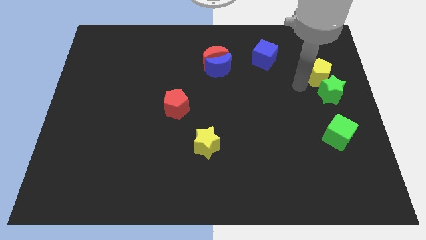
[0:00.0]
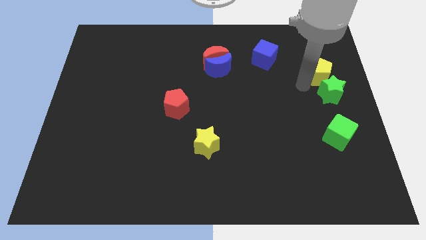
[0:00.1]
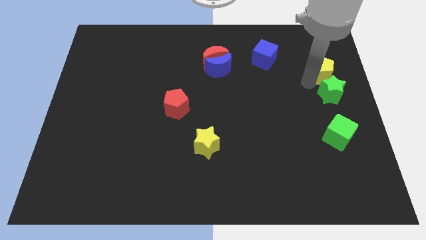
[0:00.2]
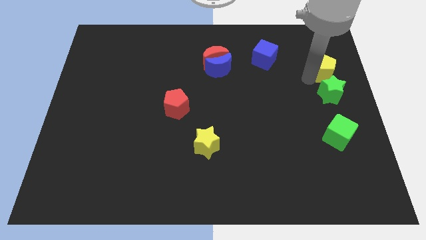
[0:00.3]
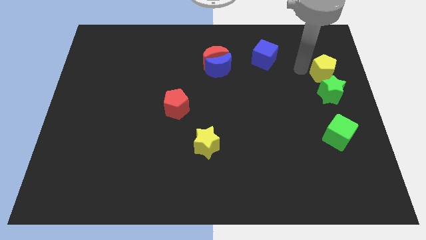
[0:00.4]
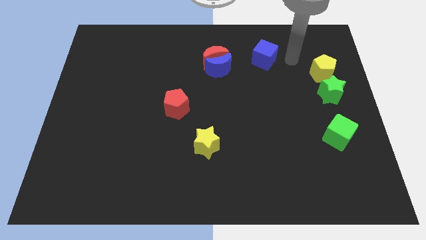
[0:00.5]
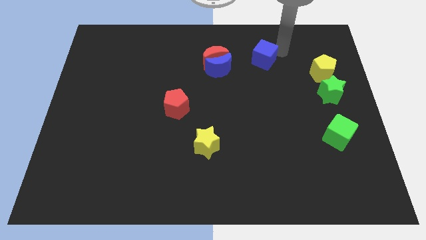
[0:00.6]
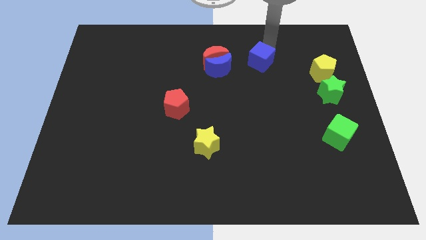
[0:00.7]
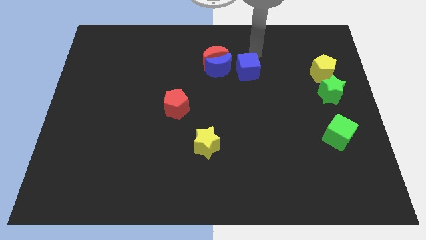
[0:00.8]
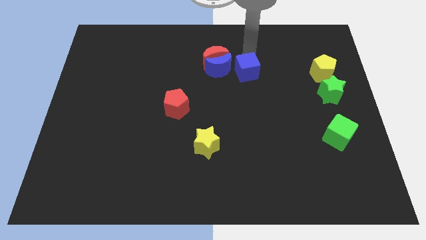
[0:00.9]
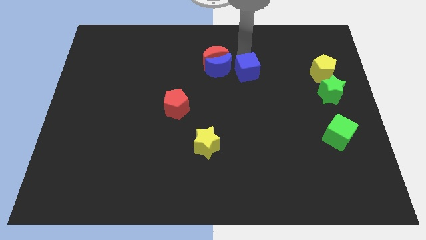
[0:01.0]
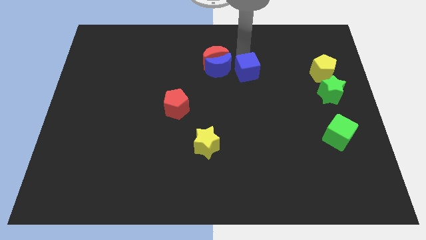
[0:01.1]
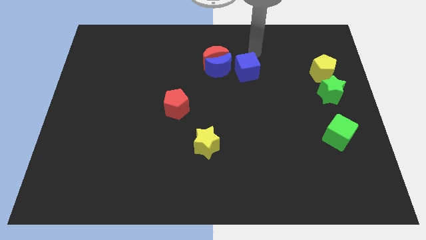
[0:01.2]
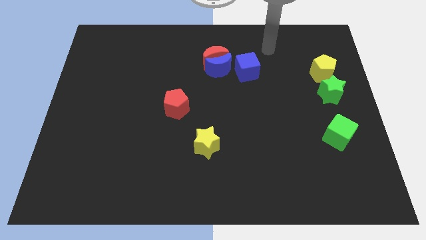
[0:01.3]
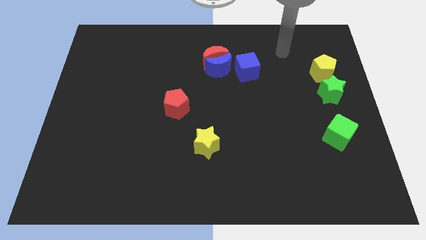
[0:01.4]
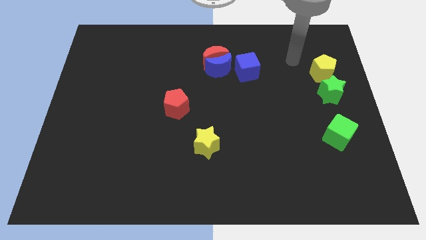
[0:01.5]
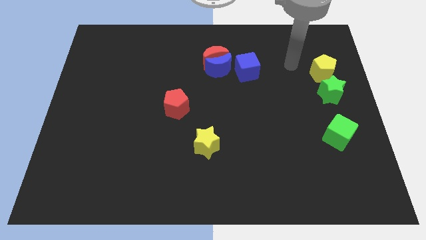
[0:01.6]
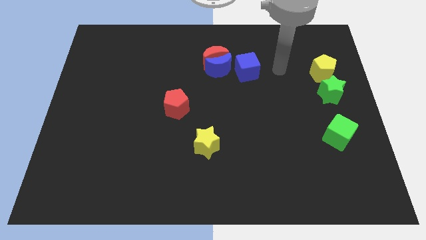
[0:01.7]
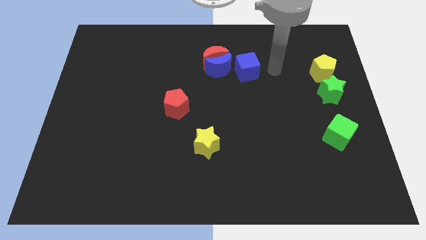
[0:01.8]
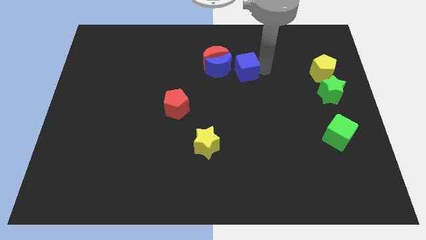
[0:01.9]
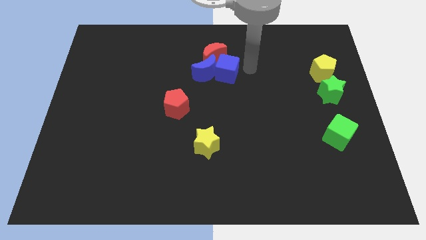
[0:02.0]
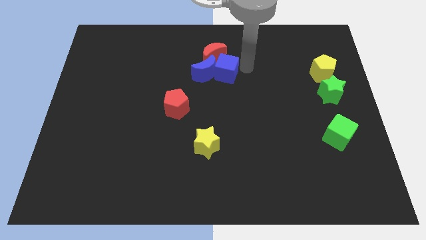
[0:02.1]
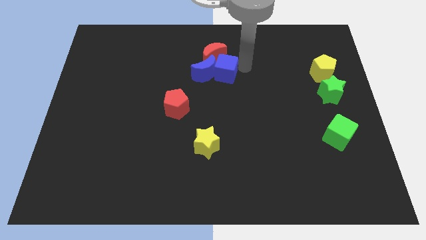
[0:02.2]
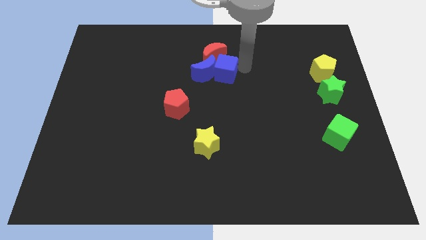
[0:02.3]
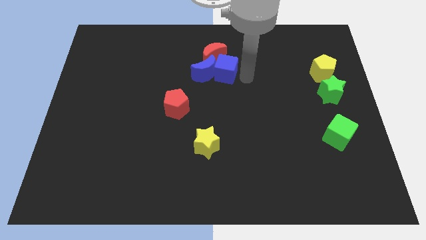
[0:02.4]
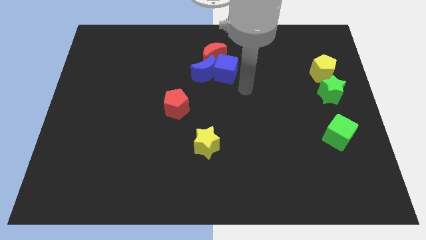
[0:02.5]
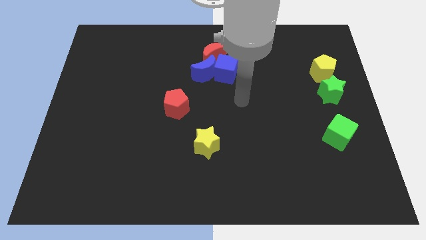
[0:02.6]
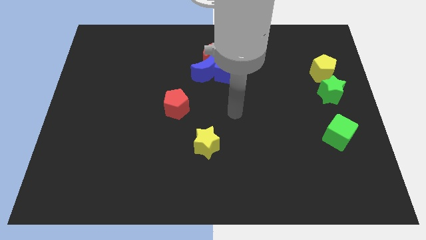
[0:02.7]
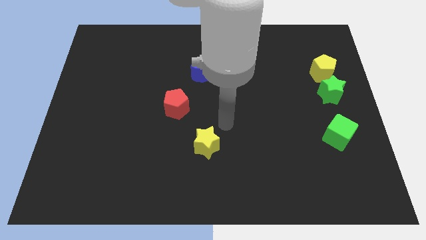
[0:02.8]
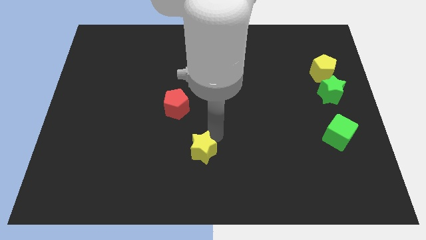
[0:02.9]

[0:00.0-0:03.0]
group up the blue blocks and red moon at the top side of the table

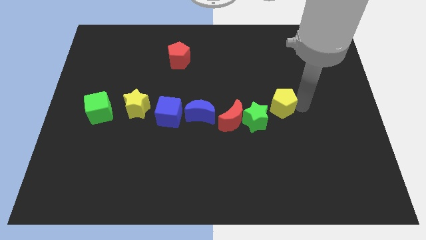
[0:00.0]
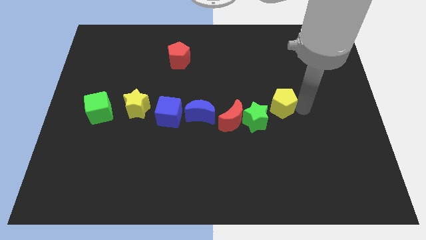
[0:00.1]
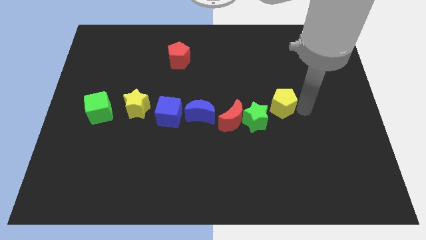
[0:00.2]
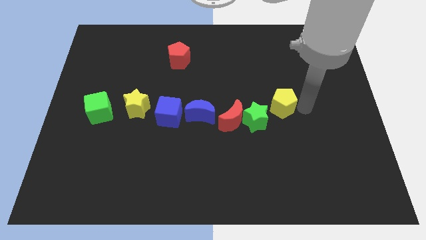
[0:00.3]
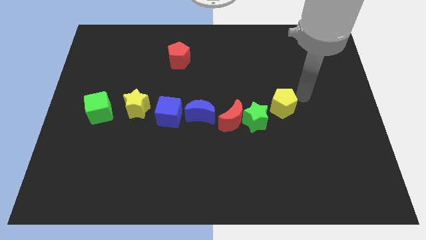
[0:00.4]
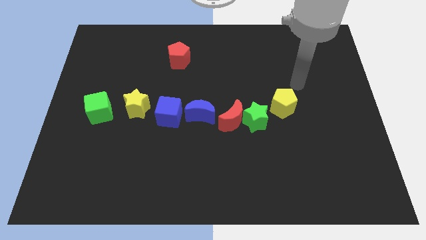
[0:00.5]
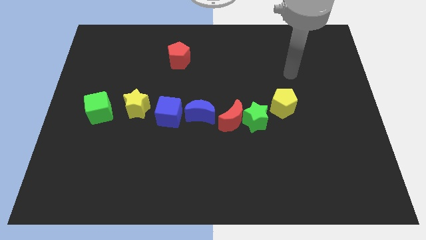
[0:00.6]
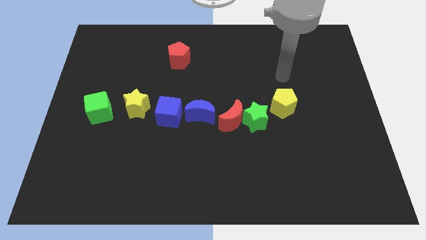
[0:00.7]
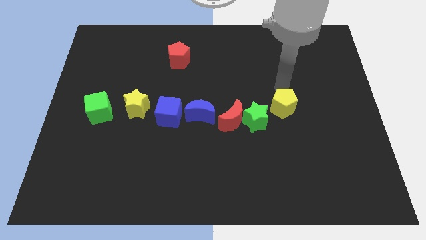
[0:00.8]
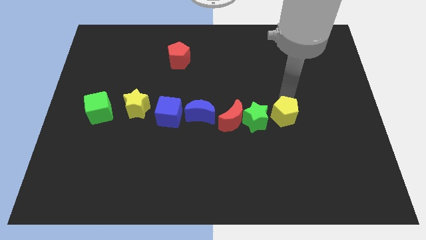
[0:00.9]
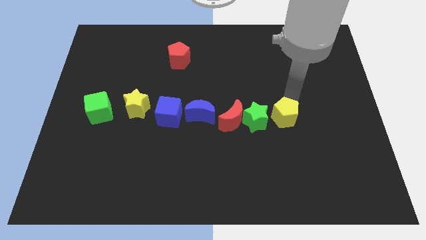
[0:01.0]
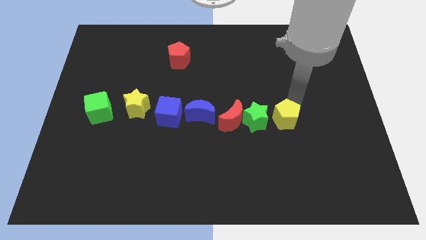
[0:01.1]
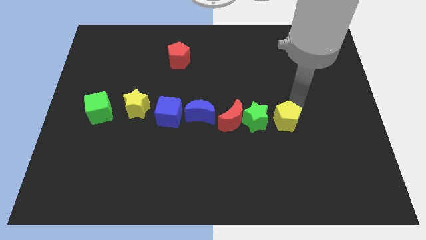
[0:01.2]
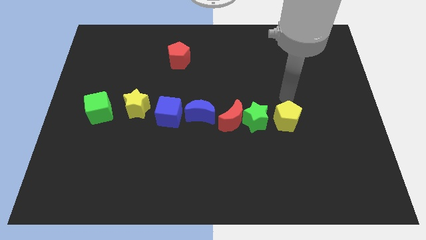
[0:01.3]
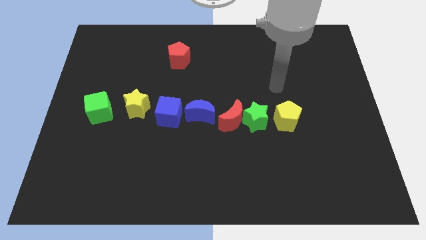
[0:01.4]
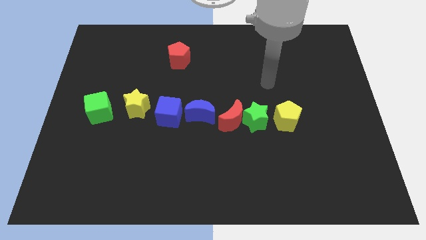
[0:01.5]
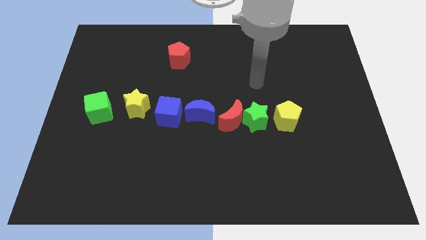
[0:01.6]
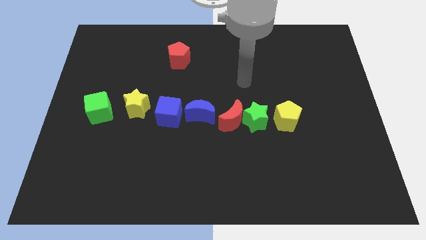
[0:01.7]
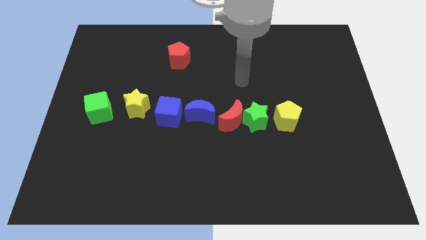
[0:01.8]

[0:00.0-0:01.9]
place the yellow pentagon right parallel to the green star

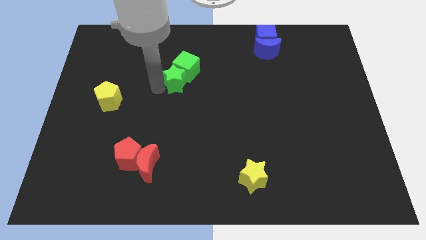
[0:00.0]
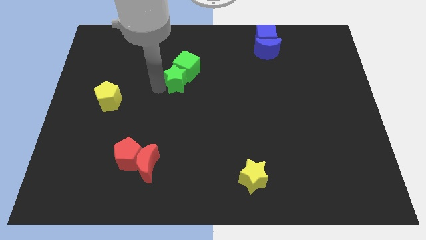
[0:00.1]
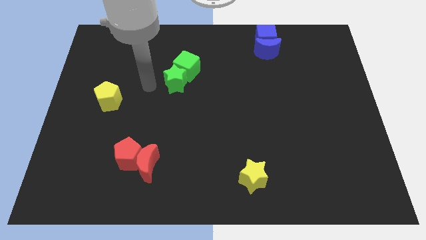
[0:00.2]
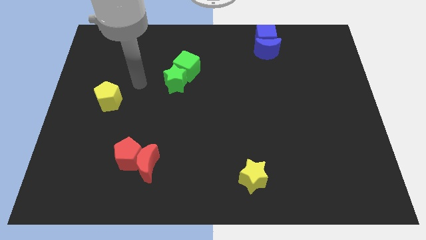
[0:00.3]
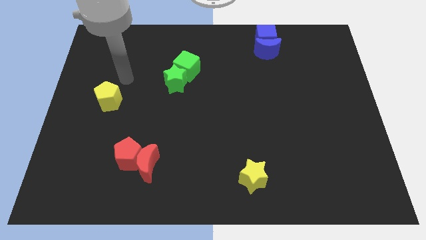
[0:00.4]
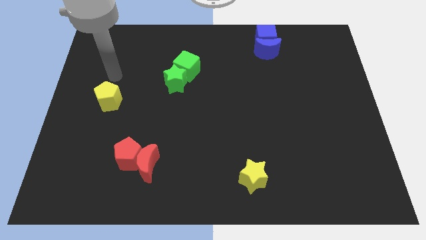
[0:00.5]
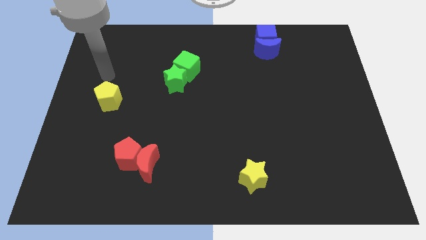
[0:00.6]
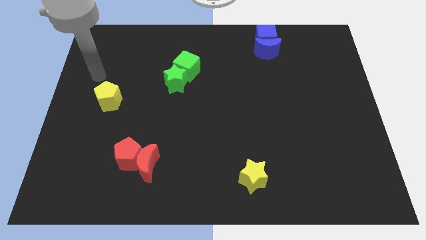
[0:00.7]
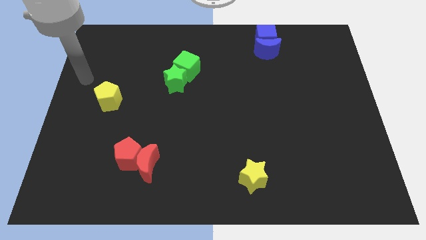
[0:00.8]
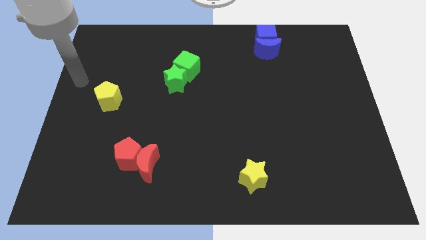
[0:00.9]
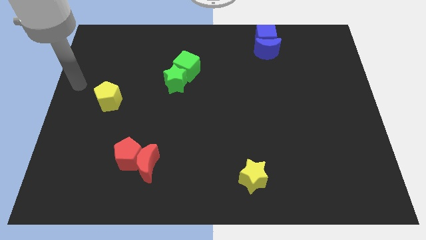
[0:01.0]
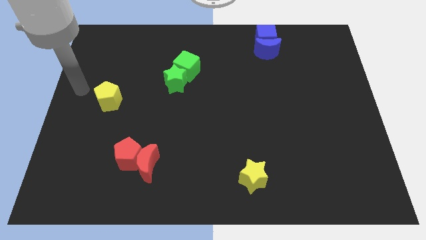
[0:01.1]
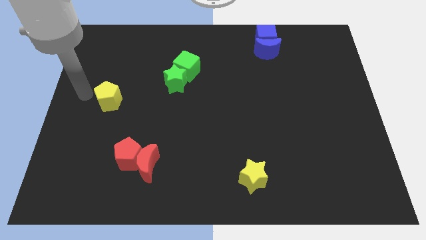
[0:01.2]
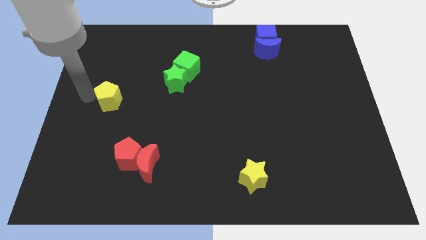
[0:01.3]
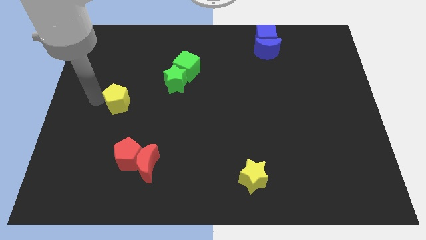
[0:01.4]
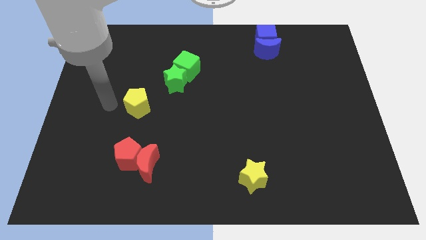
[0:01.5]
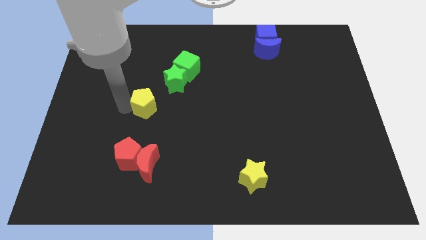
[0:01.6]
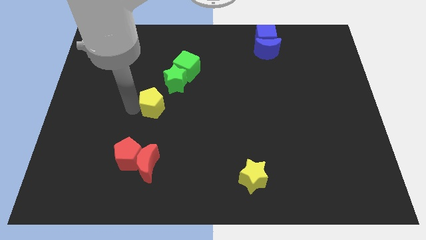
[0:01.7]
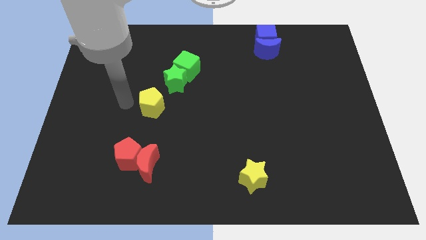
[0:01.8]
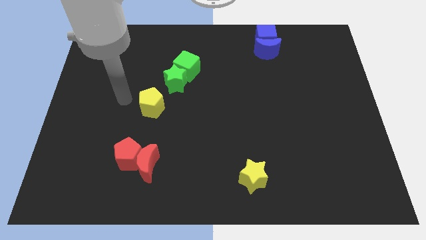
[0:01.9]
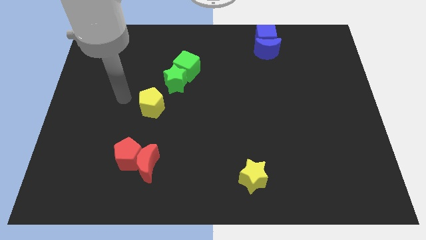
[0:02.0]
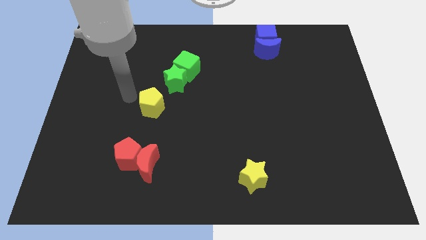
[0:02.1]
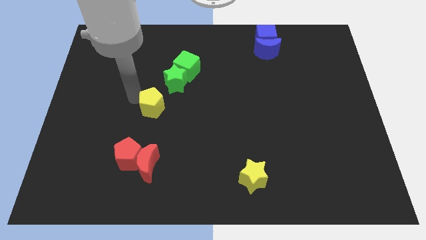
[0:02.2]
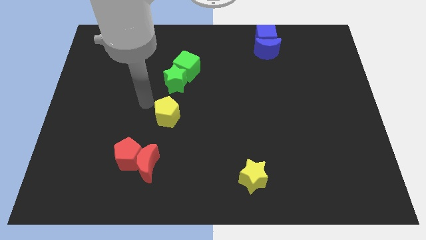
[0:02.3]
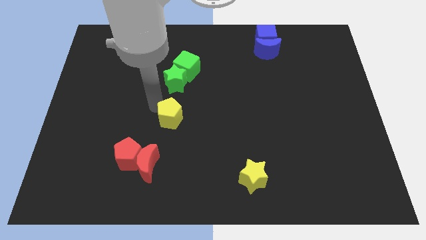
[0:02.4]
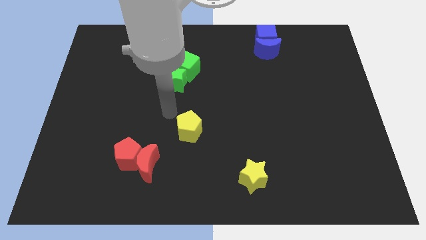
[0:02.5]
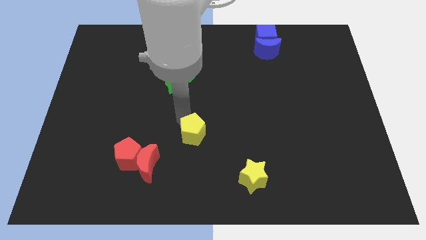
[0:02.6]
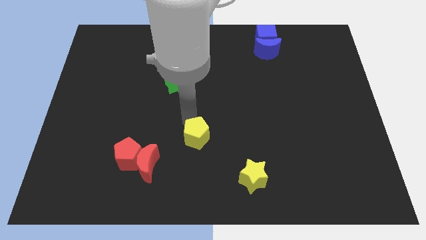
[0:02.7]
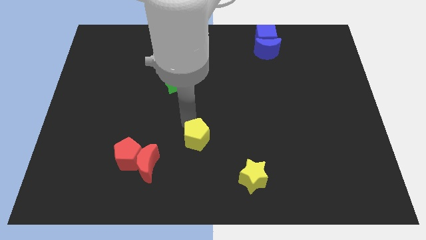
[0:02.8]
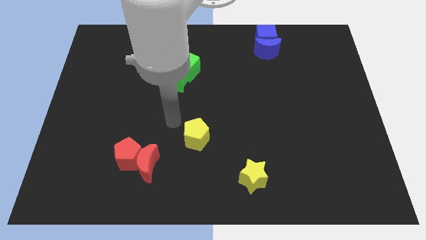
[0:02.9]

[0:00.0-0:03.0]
place the yellow pentagon at the top right side of red crescent

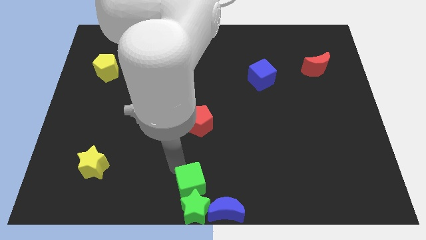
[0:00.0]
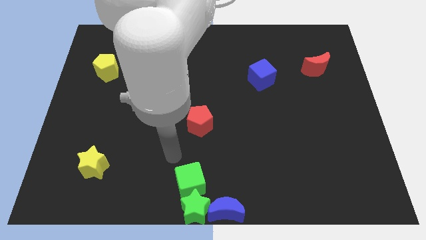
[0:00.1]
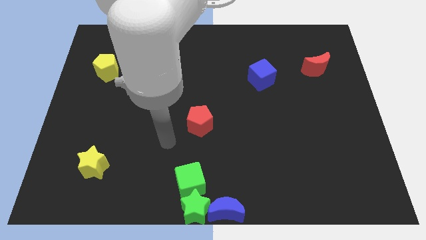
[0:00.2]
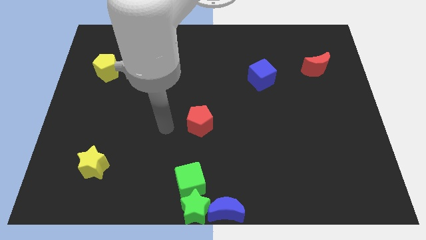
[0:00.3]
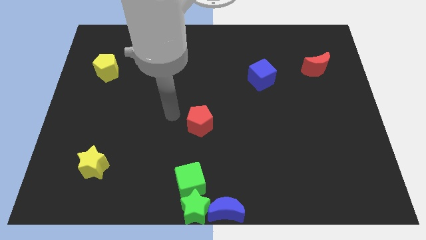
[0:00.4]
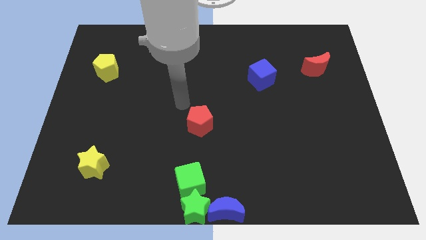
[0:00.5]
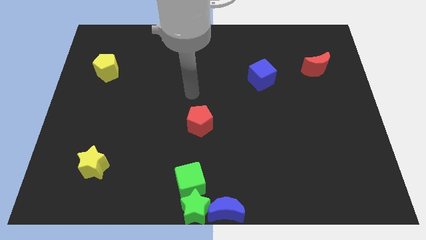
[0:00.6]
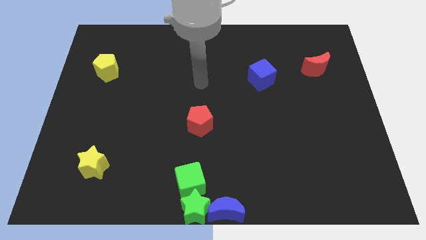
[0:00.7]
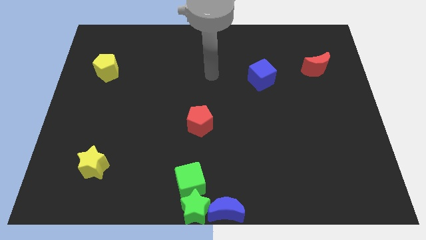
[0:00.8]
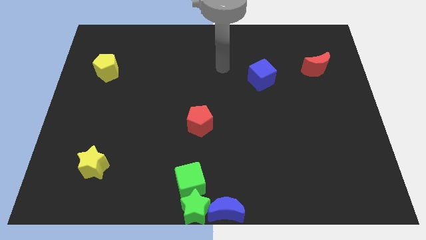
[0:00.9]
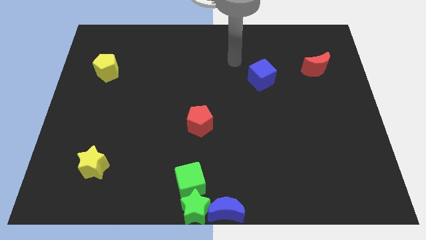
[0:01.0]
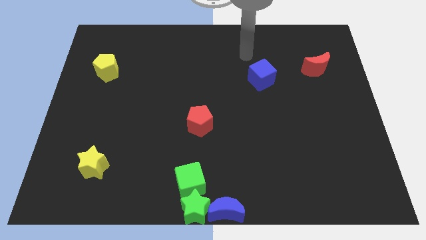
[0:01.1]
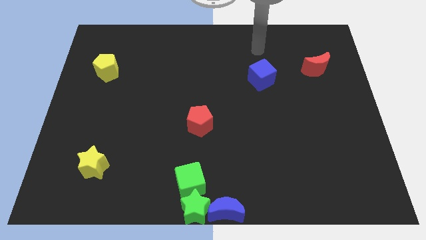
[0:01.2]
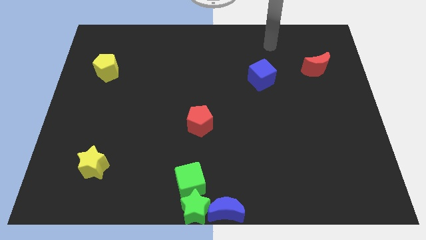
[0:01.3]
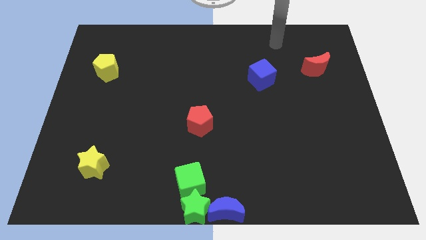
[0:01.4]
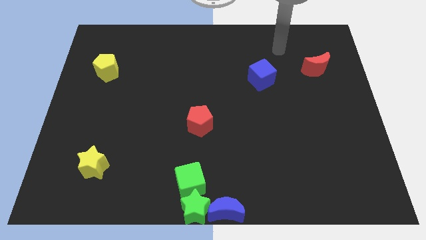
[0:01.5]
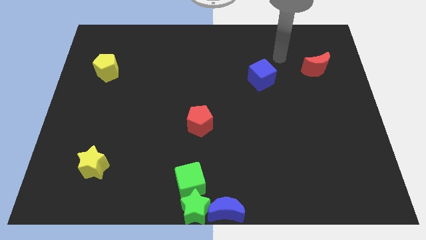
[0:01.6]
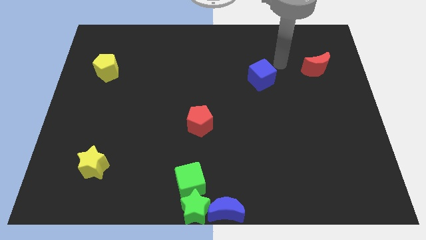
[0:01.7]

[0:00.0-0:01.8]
point your arm diagonal towards blue cube
